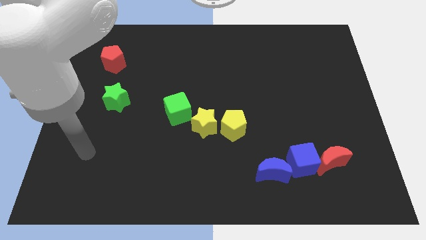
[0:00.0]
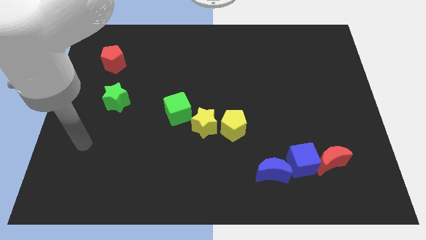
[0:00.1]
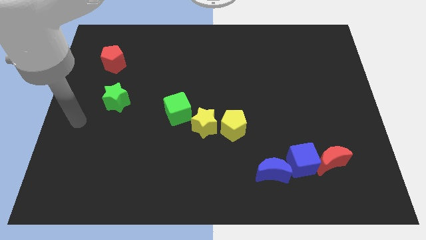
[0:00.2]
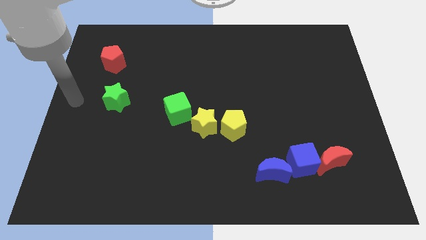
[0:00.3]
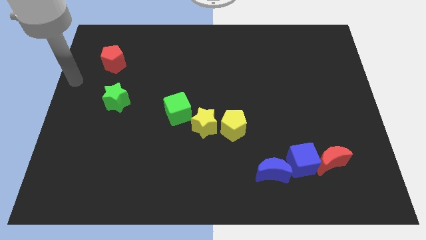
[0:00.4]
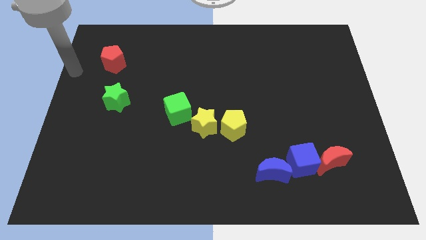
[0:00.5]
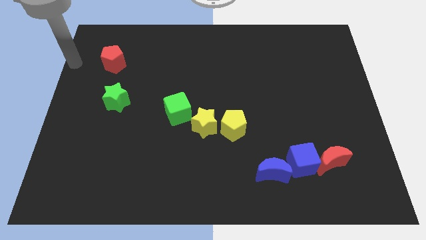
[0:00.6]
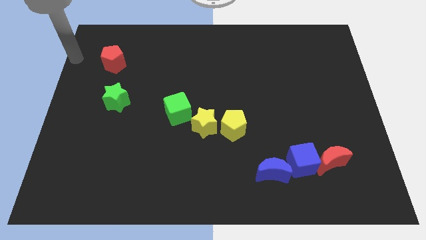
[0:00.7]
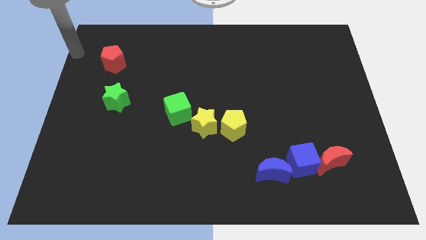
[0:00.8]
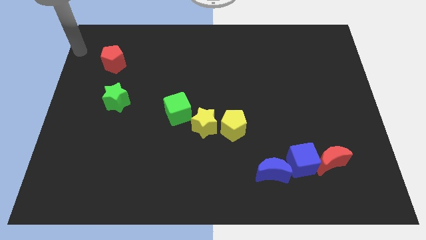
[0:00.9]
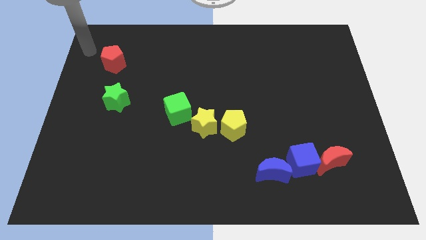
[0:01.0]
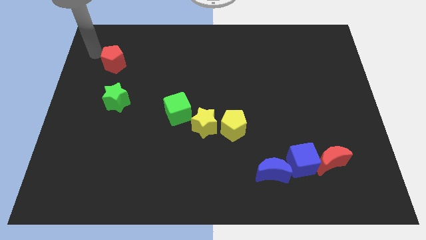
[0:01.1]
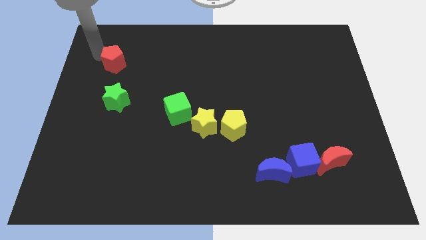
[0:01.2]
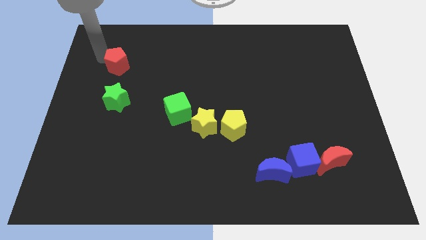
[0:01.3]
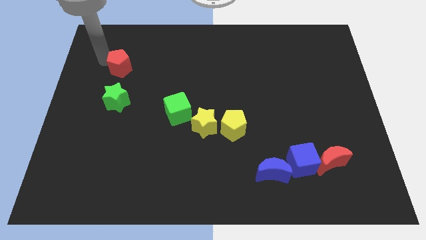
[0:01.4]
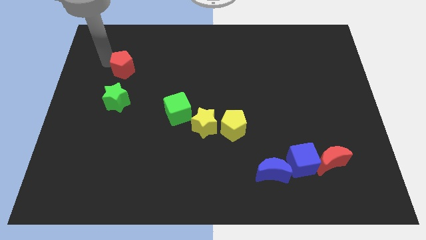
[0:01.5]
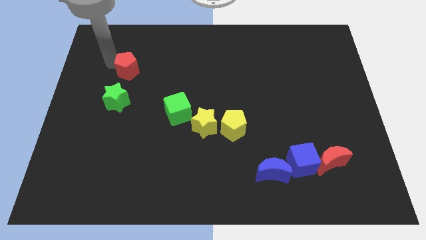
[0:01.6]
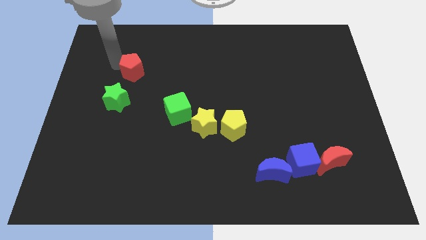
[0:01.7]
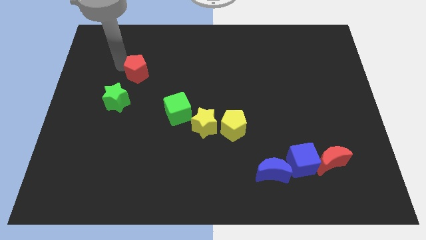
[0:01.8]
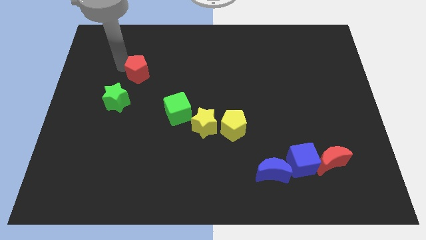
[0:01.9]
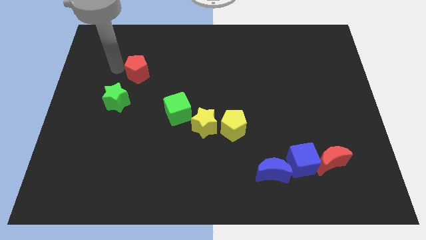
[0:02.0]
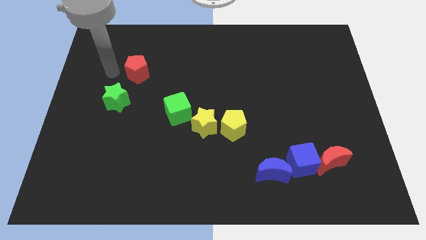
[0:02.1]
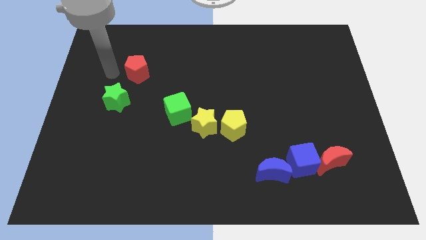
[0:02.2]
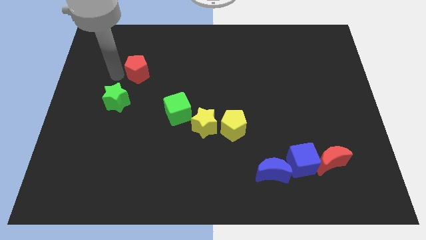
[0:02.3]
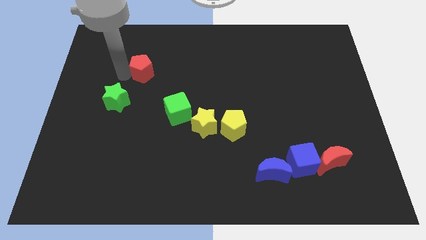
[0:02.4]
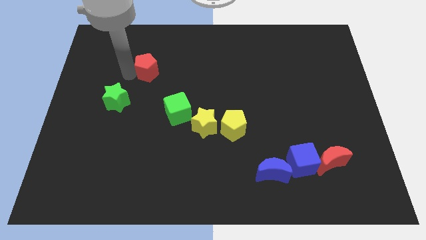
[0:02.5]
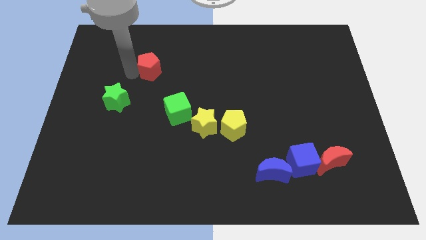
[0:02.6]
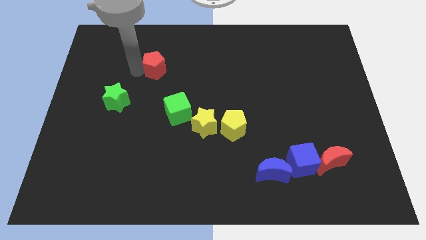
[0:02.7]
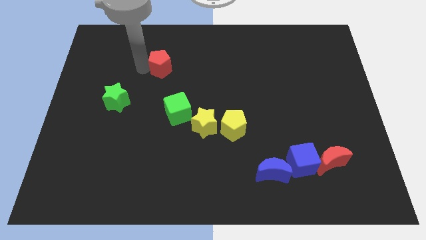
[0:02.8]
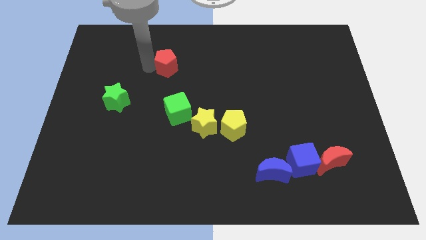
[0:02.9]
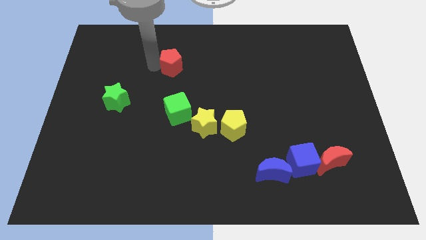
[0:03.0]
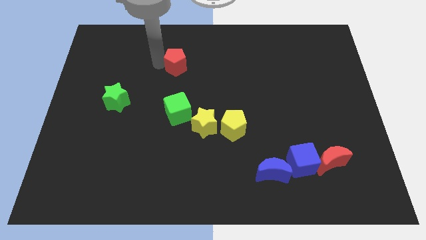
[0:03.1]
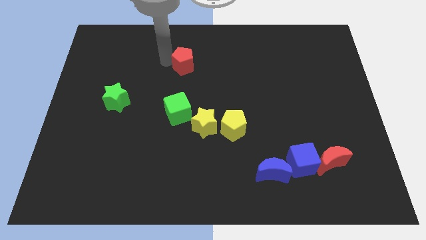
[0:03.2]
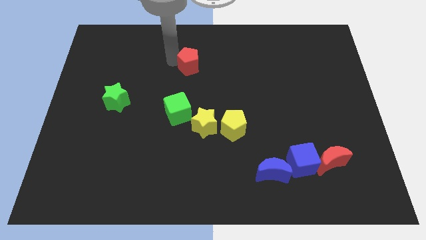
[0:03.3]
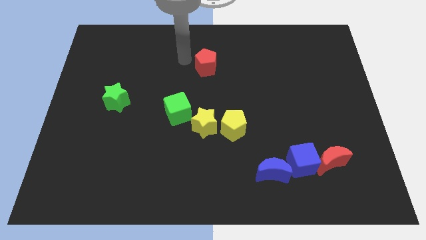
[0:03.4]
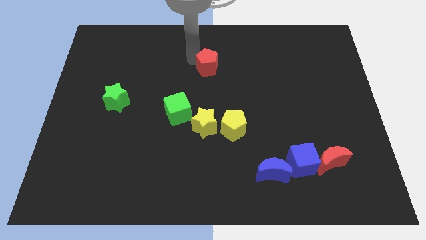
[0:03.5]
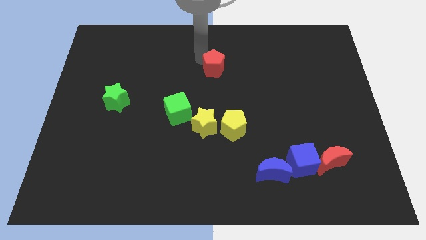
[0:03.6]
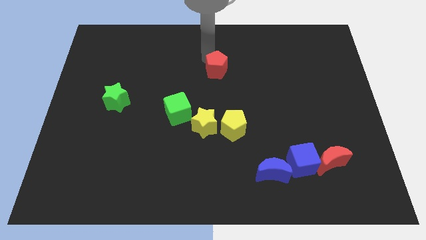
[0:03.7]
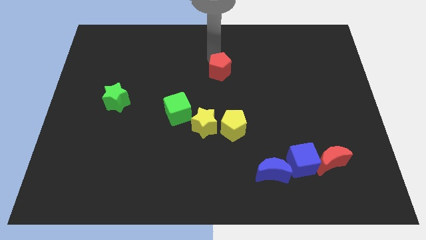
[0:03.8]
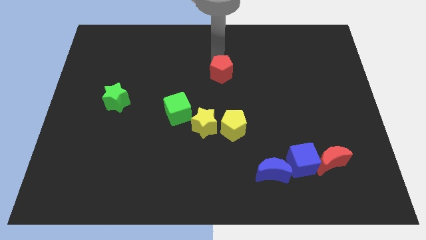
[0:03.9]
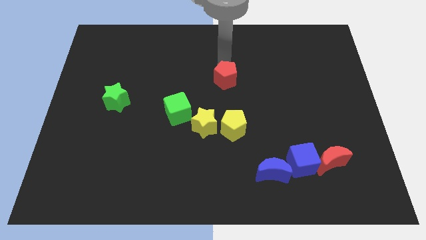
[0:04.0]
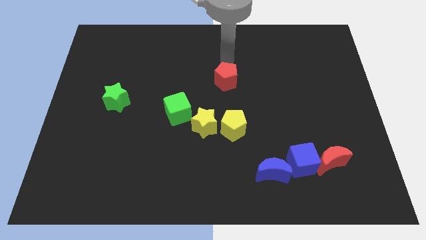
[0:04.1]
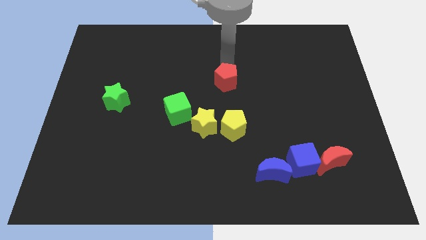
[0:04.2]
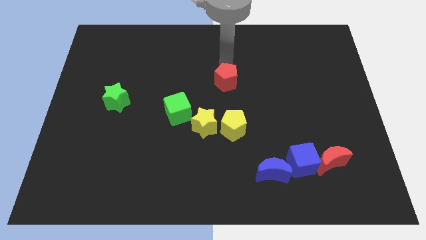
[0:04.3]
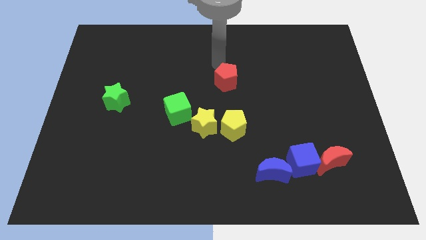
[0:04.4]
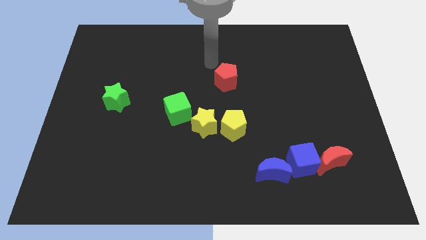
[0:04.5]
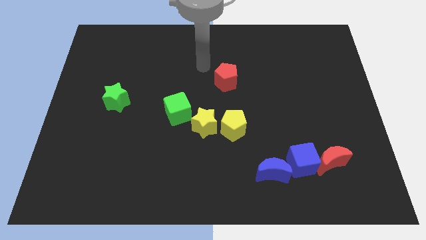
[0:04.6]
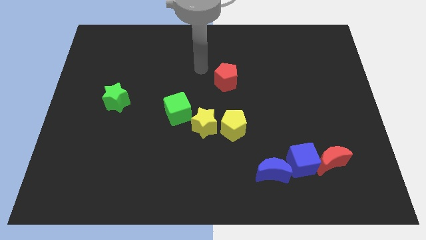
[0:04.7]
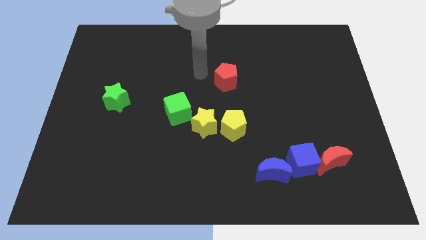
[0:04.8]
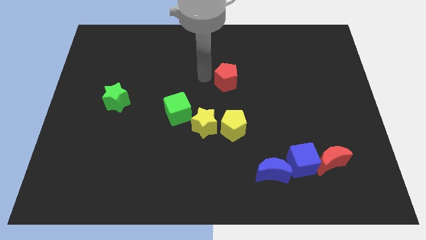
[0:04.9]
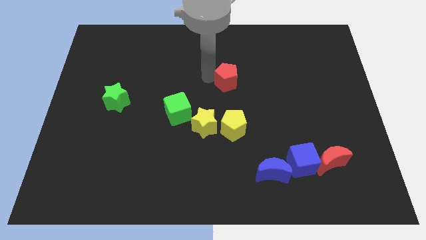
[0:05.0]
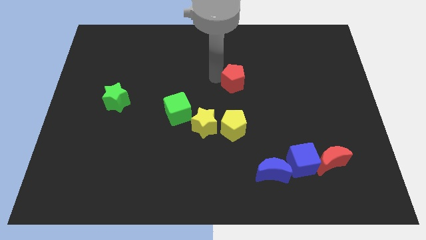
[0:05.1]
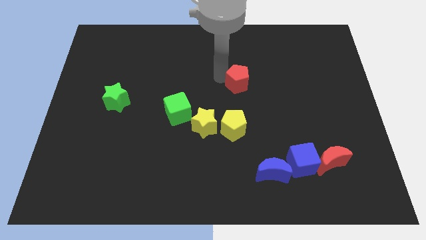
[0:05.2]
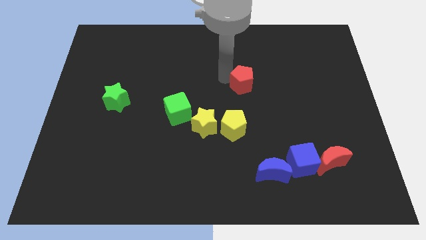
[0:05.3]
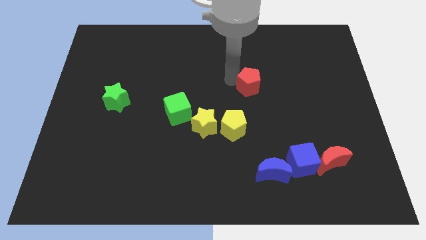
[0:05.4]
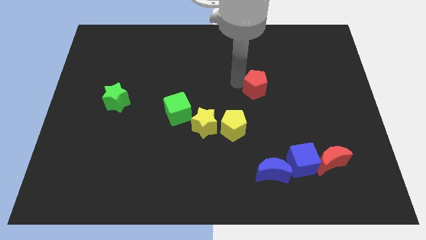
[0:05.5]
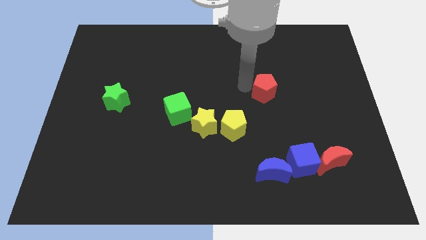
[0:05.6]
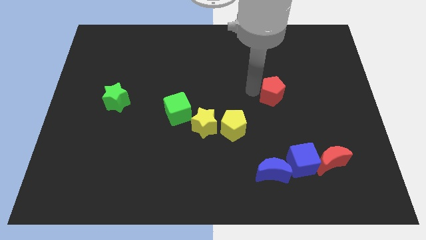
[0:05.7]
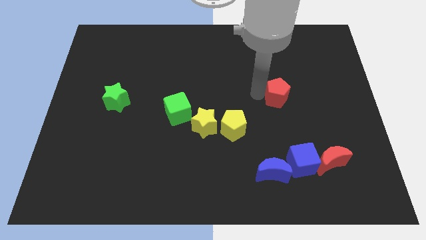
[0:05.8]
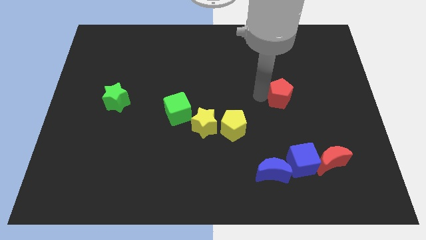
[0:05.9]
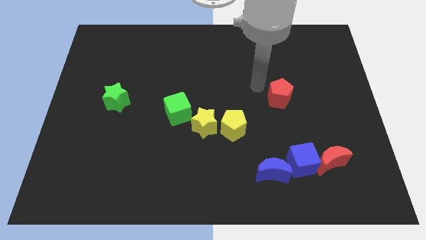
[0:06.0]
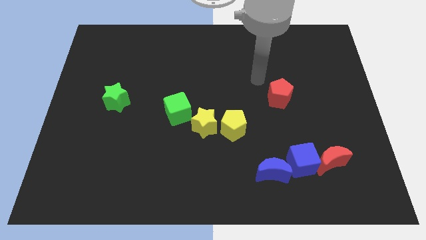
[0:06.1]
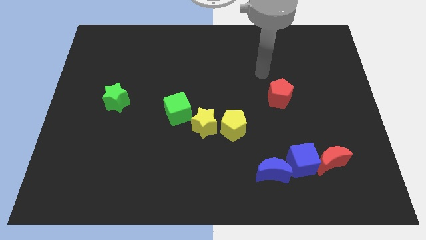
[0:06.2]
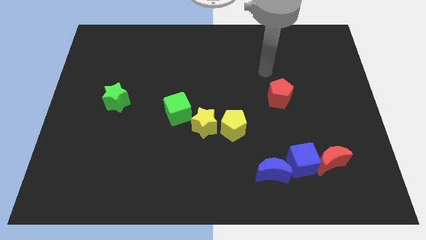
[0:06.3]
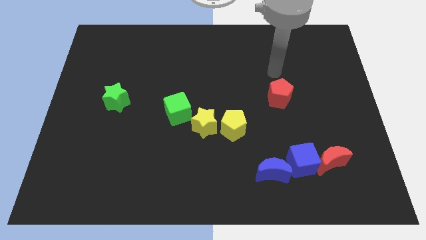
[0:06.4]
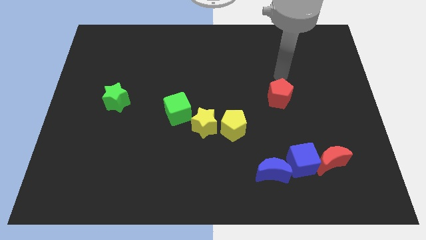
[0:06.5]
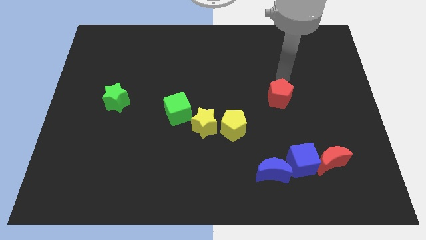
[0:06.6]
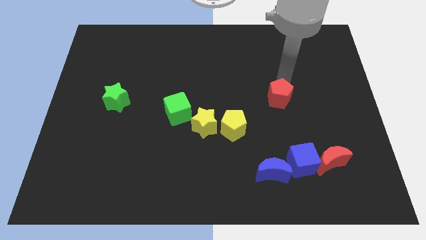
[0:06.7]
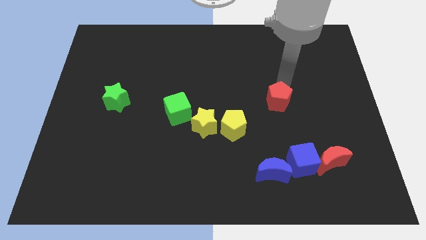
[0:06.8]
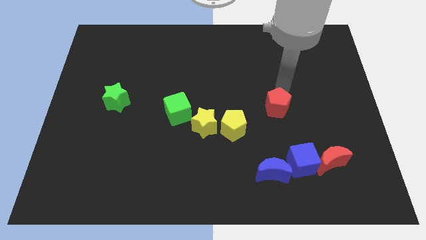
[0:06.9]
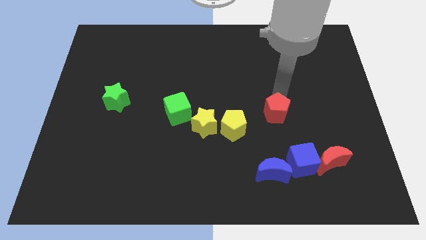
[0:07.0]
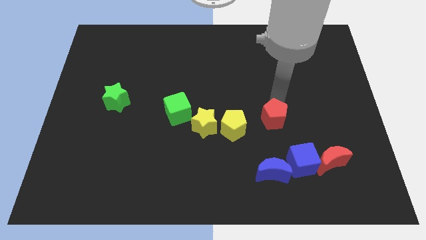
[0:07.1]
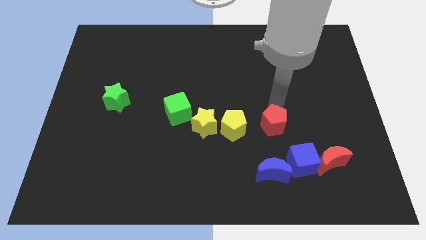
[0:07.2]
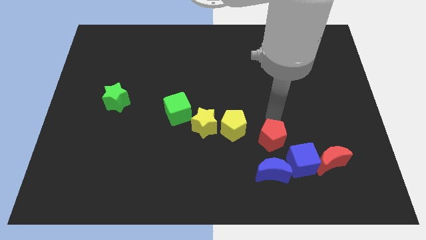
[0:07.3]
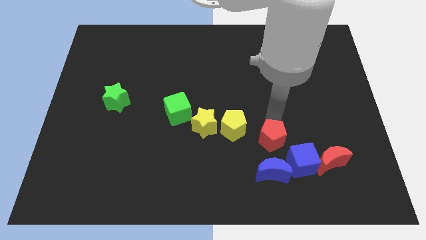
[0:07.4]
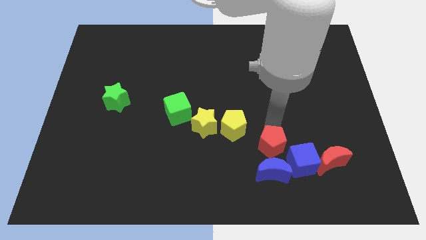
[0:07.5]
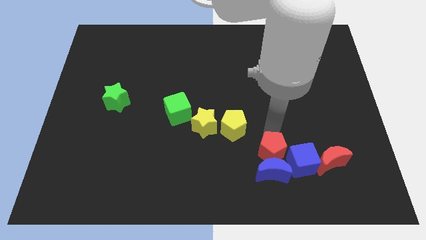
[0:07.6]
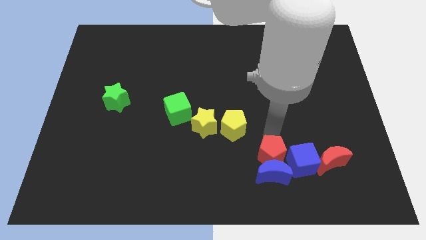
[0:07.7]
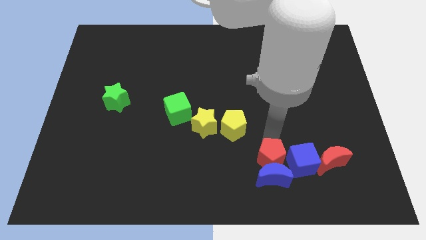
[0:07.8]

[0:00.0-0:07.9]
put the red pentagon next to the blue moon

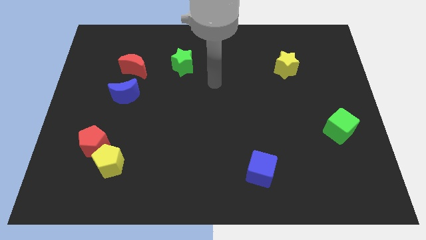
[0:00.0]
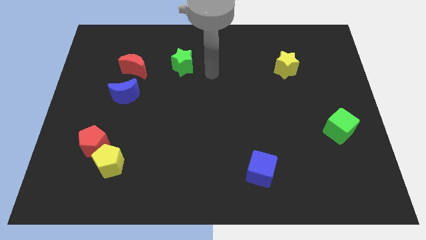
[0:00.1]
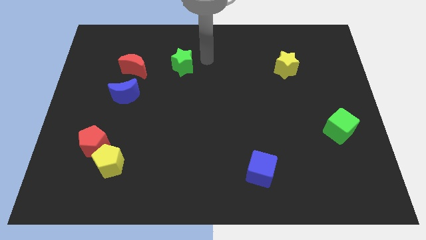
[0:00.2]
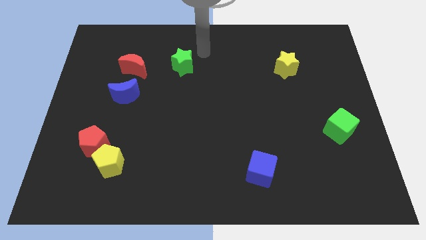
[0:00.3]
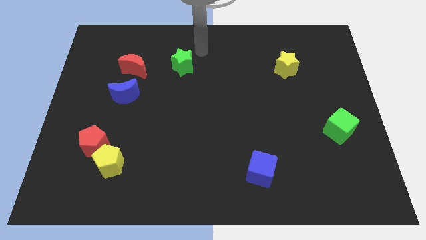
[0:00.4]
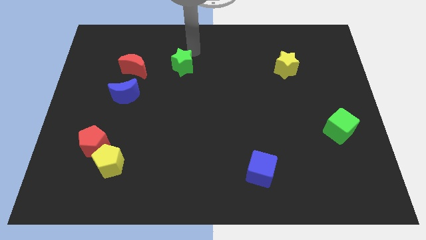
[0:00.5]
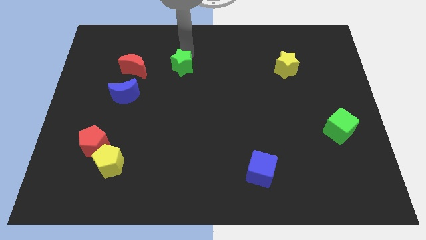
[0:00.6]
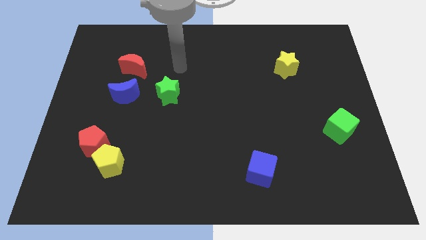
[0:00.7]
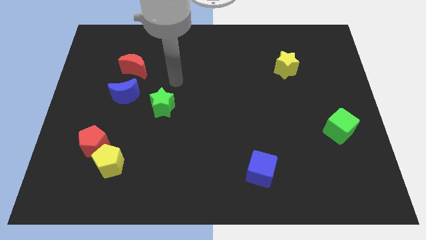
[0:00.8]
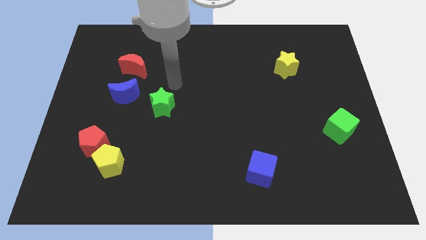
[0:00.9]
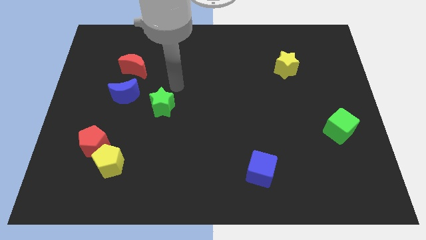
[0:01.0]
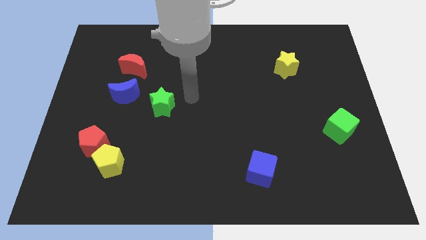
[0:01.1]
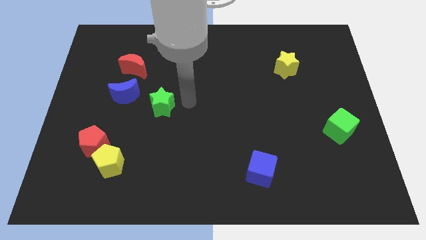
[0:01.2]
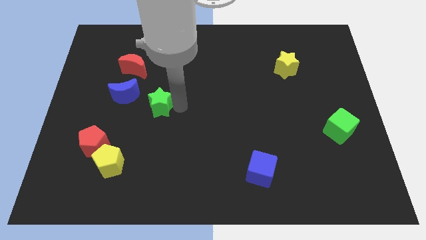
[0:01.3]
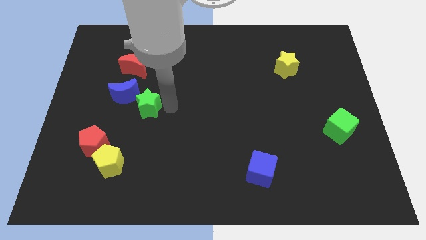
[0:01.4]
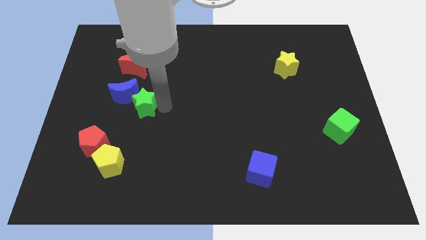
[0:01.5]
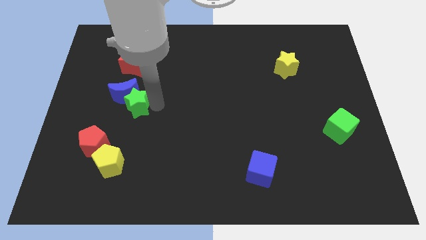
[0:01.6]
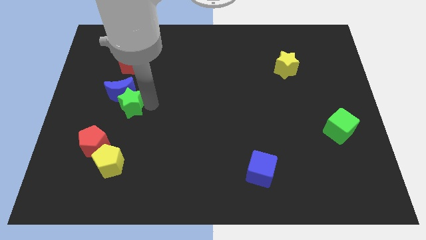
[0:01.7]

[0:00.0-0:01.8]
move the green star close to the blue moon
